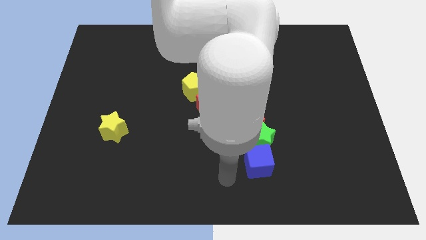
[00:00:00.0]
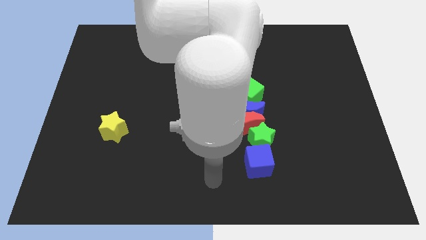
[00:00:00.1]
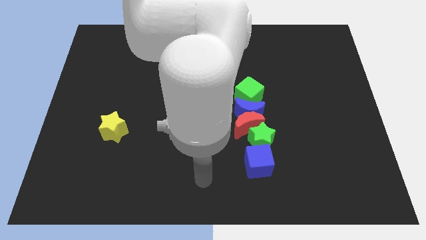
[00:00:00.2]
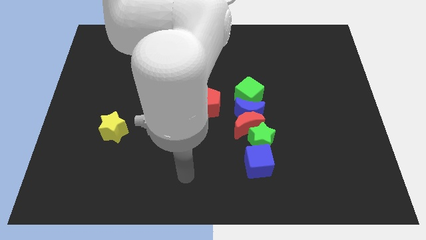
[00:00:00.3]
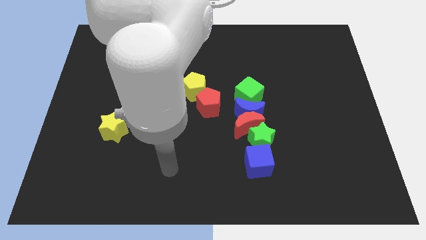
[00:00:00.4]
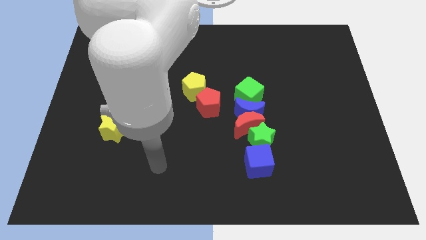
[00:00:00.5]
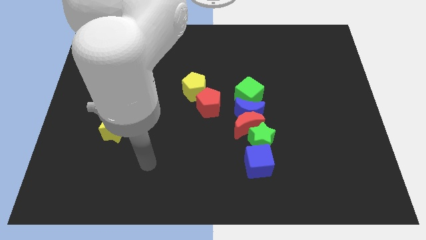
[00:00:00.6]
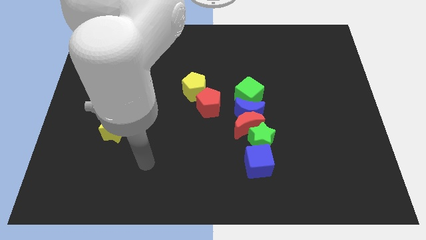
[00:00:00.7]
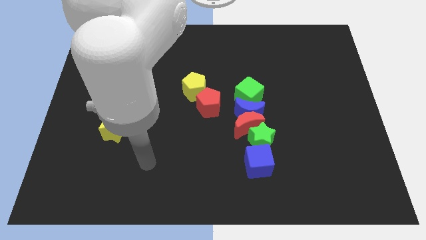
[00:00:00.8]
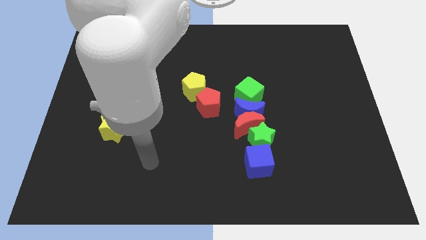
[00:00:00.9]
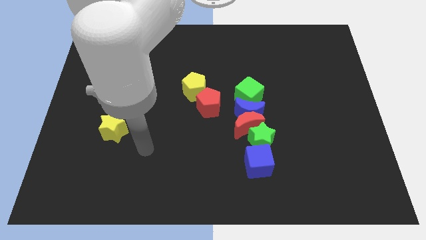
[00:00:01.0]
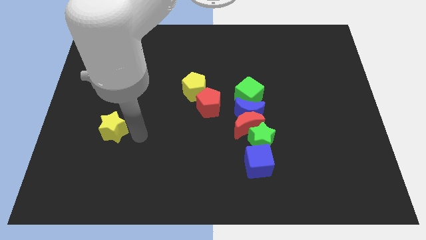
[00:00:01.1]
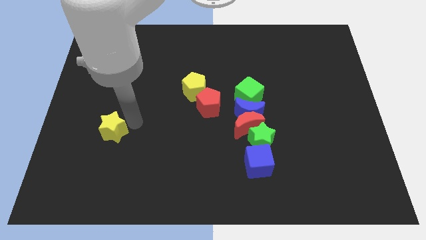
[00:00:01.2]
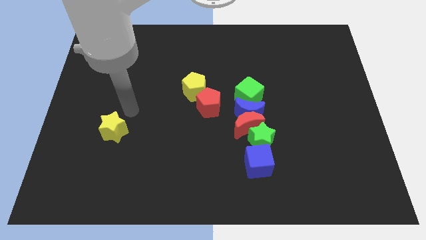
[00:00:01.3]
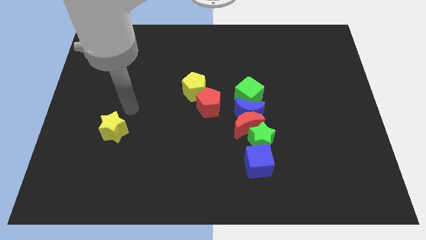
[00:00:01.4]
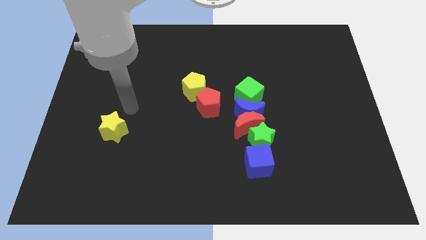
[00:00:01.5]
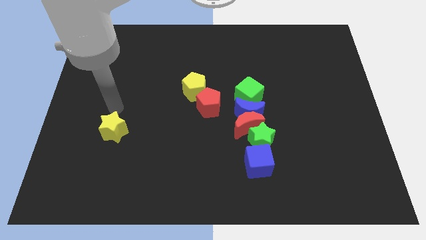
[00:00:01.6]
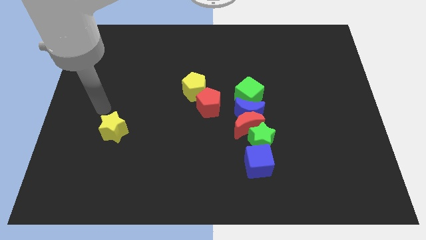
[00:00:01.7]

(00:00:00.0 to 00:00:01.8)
move your arm to the top of the yellow star

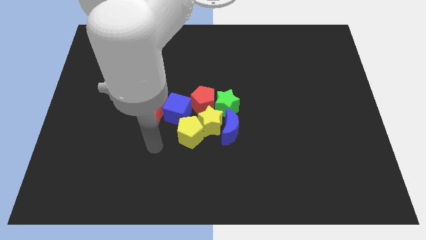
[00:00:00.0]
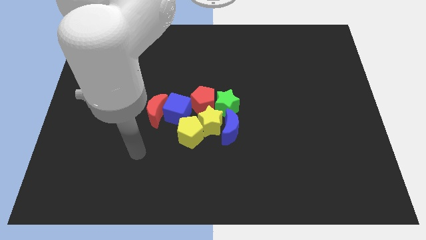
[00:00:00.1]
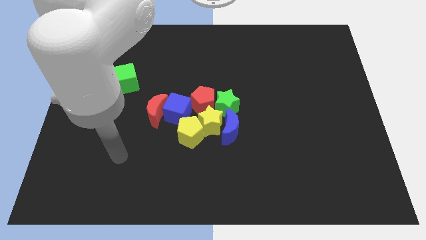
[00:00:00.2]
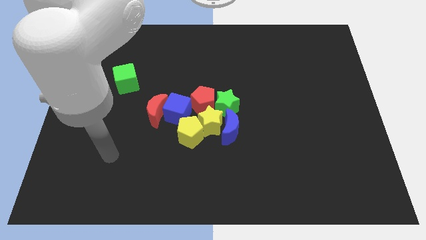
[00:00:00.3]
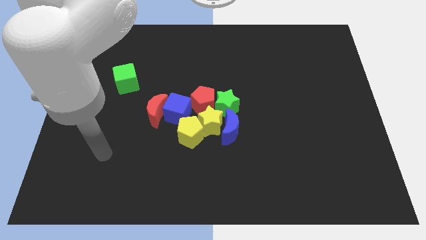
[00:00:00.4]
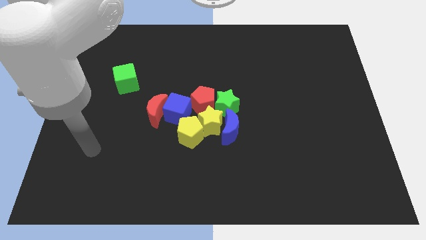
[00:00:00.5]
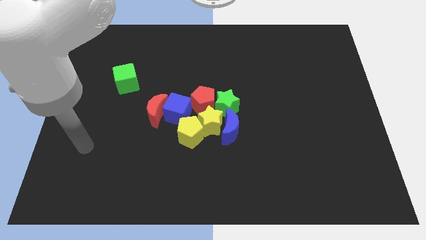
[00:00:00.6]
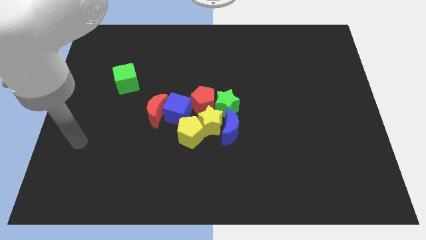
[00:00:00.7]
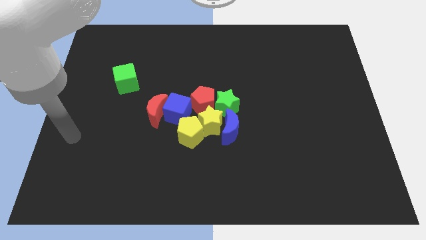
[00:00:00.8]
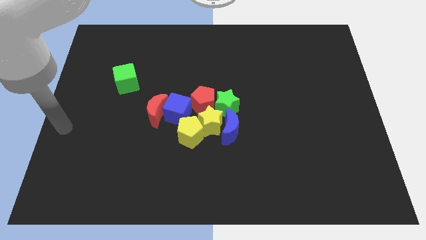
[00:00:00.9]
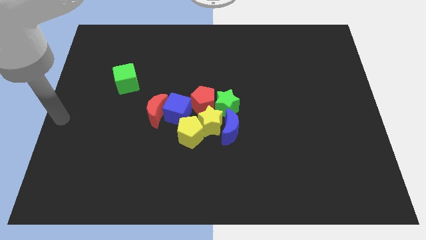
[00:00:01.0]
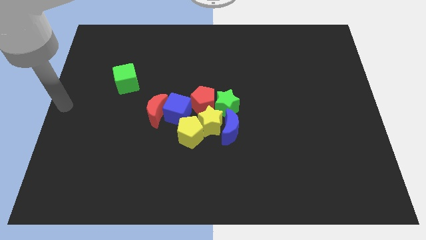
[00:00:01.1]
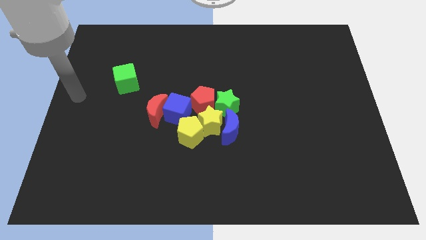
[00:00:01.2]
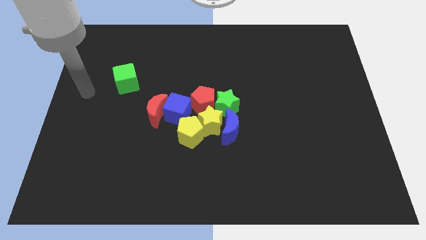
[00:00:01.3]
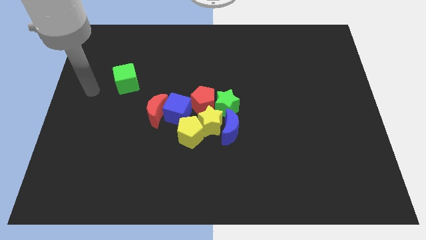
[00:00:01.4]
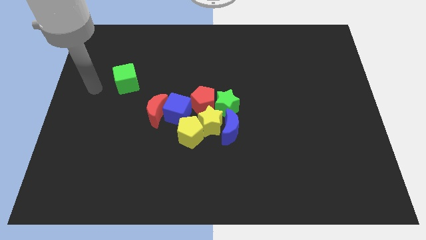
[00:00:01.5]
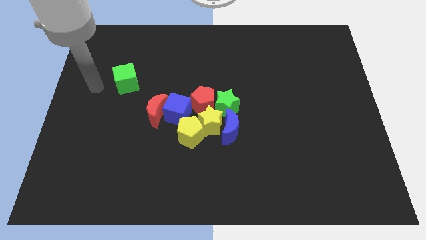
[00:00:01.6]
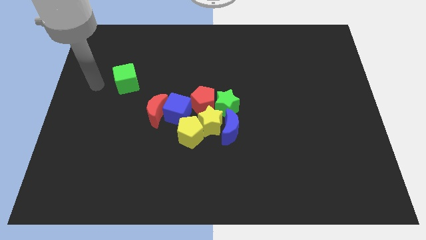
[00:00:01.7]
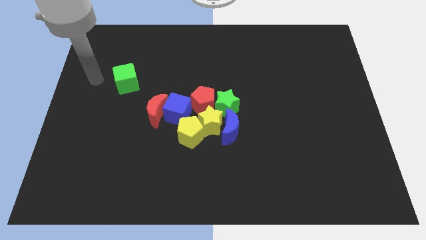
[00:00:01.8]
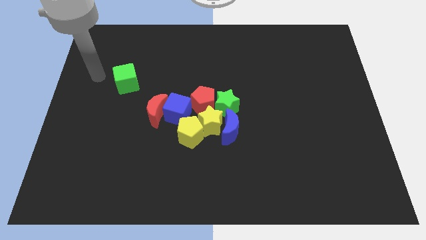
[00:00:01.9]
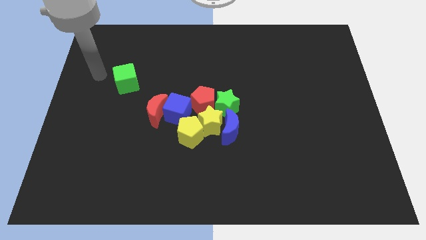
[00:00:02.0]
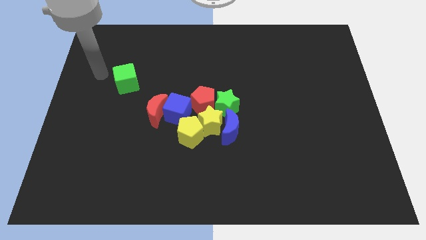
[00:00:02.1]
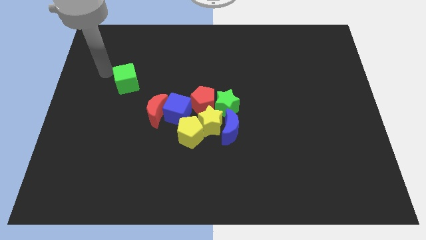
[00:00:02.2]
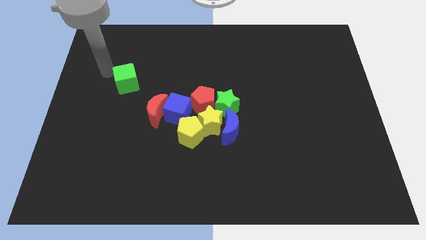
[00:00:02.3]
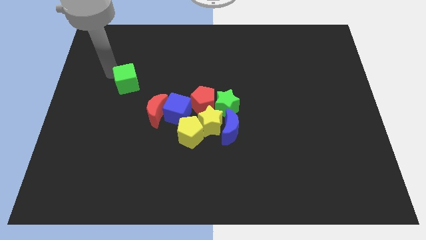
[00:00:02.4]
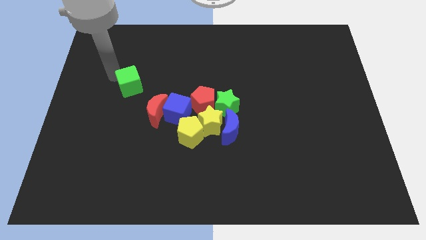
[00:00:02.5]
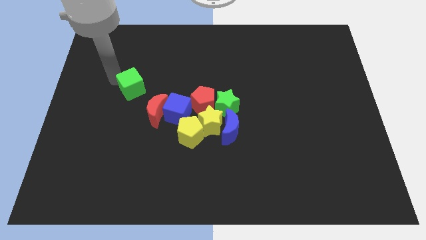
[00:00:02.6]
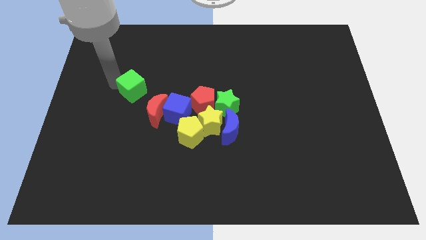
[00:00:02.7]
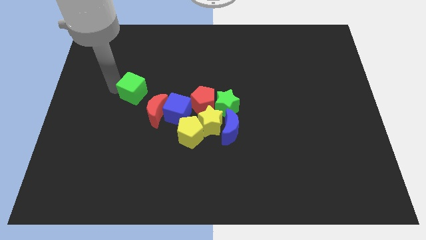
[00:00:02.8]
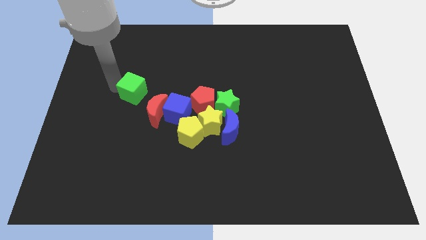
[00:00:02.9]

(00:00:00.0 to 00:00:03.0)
move the green cube into the red crescent

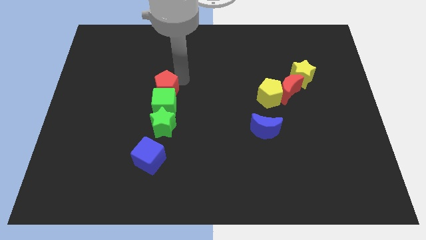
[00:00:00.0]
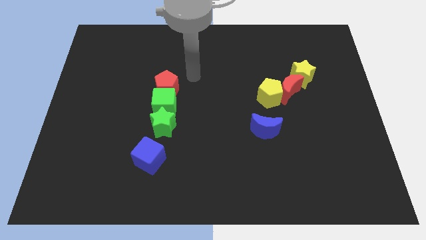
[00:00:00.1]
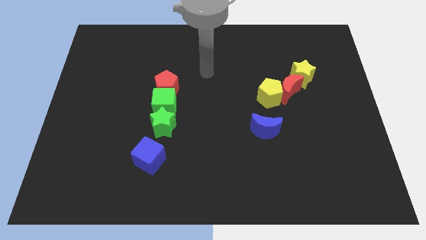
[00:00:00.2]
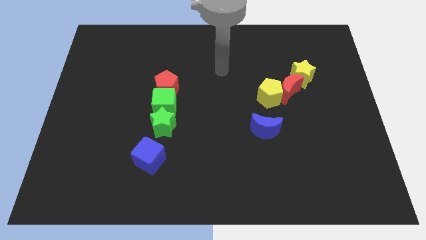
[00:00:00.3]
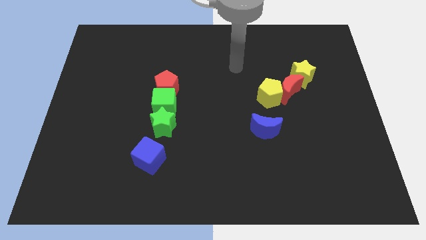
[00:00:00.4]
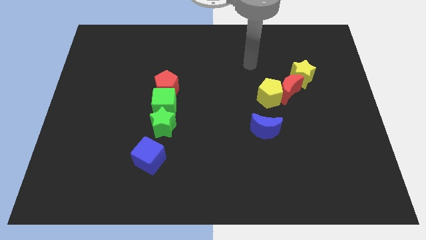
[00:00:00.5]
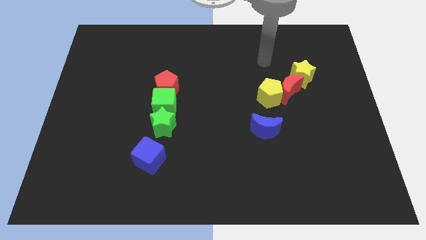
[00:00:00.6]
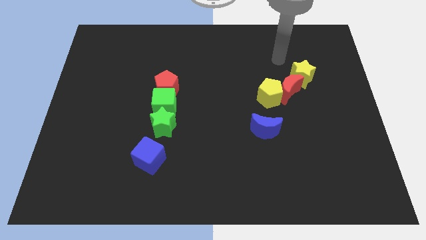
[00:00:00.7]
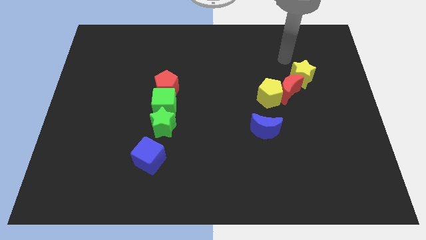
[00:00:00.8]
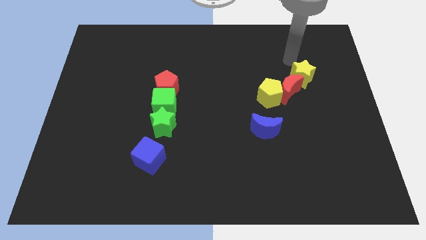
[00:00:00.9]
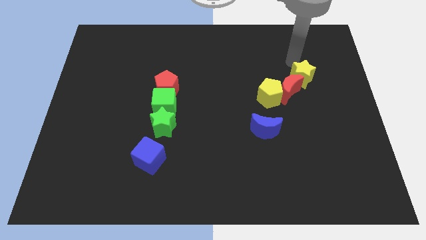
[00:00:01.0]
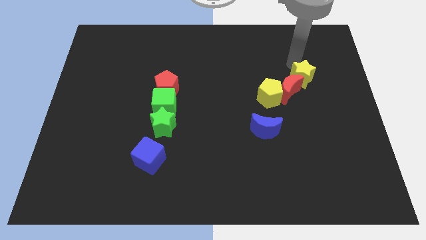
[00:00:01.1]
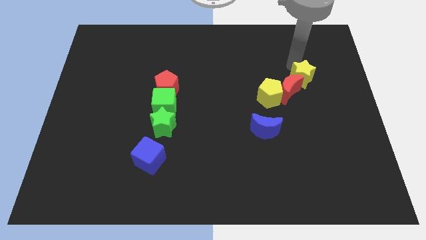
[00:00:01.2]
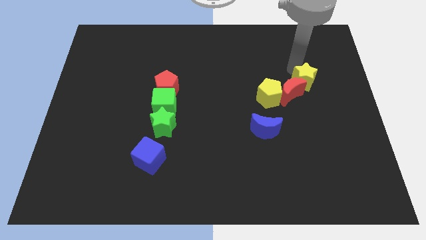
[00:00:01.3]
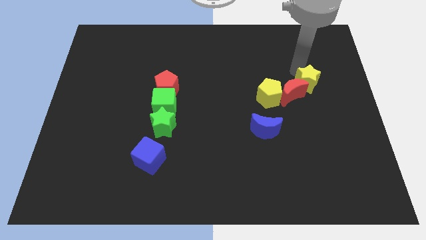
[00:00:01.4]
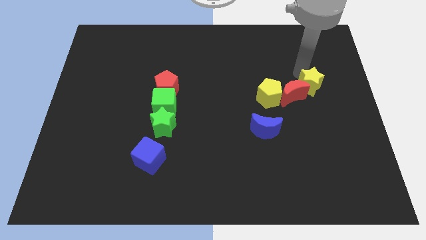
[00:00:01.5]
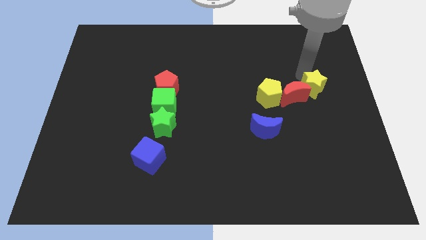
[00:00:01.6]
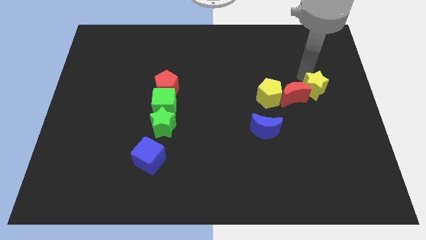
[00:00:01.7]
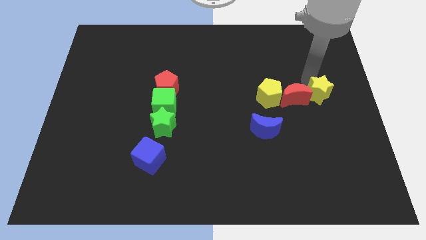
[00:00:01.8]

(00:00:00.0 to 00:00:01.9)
place your hand to the left of the yellow star

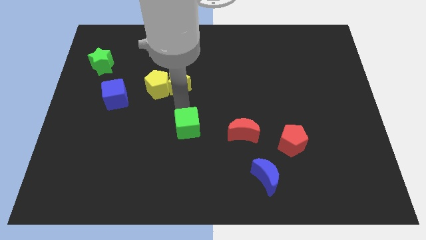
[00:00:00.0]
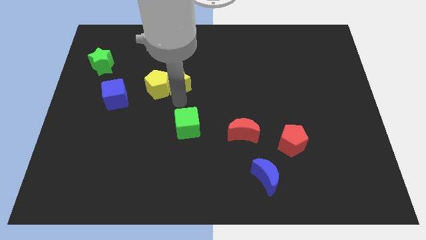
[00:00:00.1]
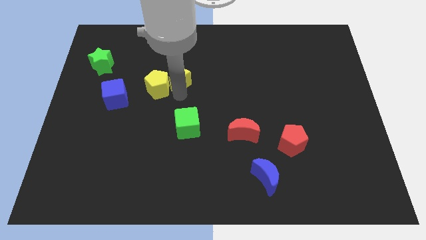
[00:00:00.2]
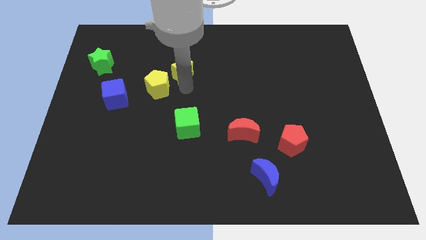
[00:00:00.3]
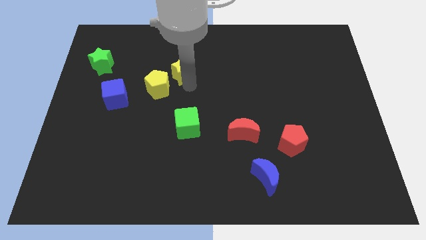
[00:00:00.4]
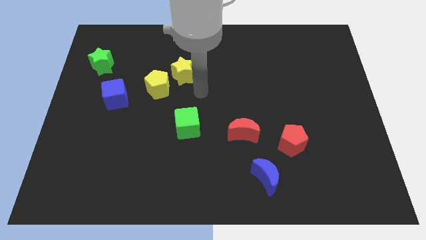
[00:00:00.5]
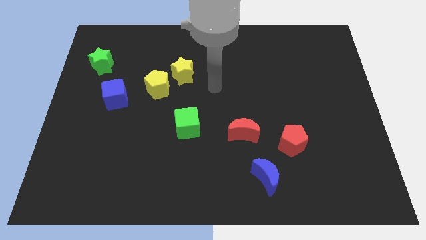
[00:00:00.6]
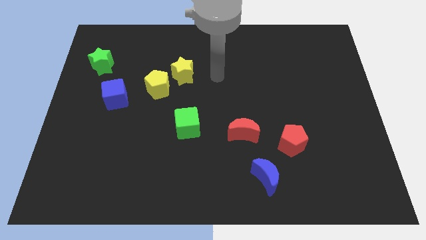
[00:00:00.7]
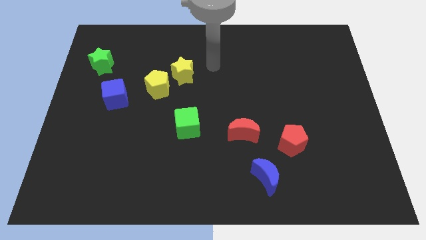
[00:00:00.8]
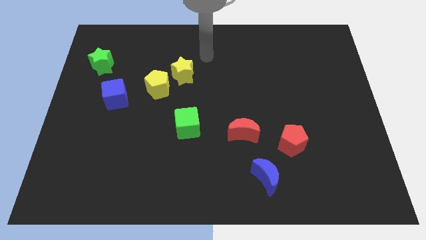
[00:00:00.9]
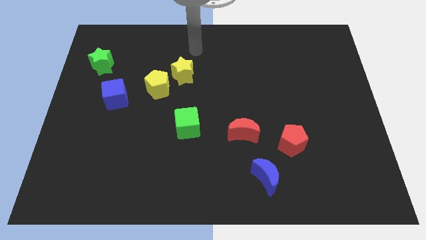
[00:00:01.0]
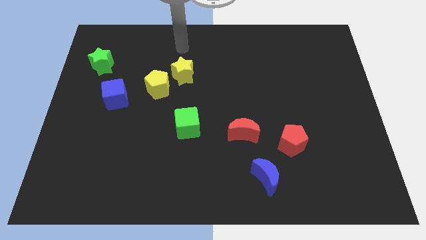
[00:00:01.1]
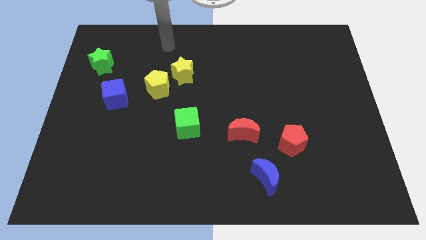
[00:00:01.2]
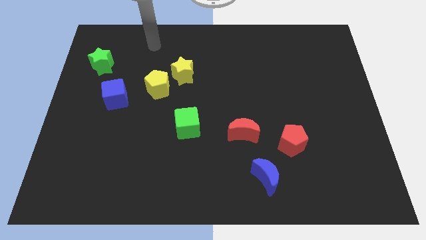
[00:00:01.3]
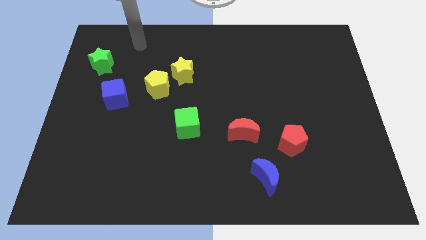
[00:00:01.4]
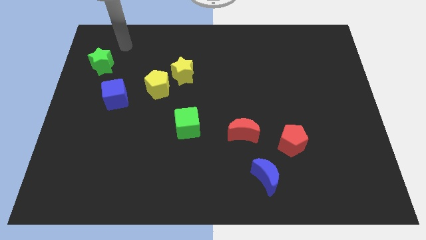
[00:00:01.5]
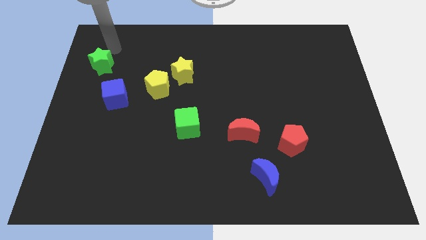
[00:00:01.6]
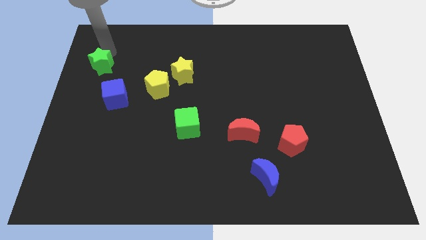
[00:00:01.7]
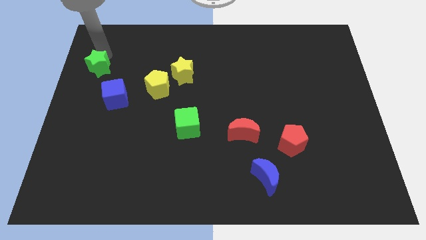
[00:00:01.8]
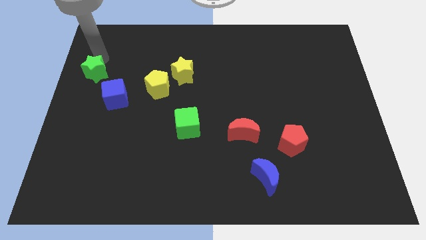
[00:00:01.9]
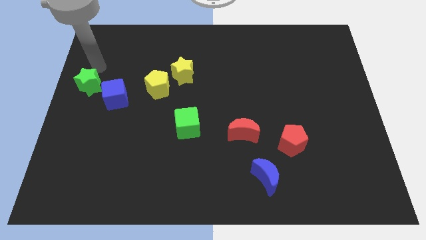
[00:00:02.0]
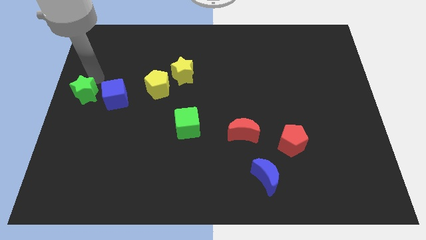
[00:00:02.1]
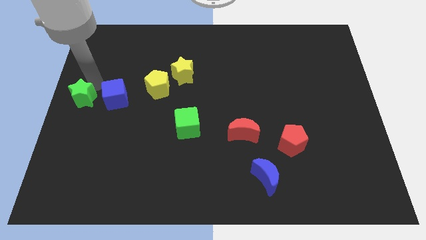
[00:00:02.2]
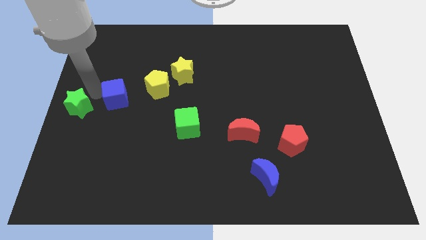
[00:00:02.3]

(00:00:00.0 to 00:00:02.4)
move the green star to the left of the blue cube
